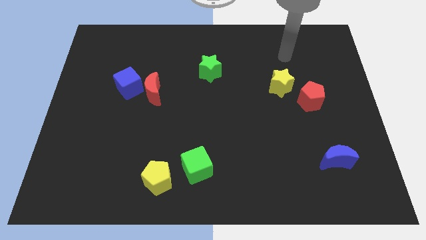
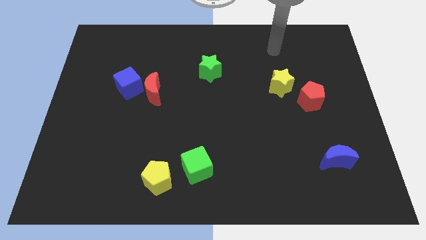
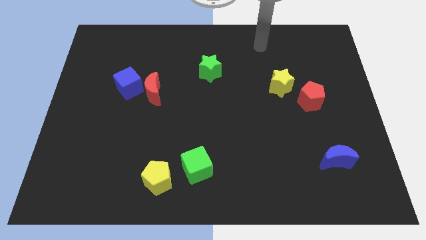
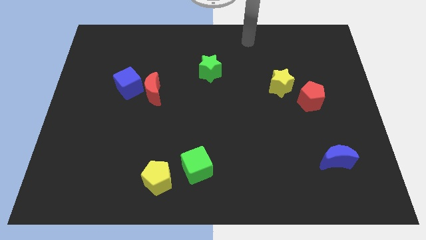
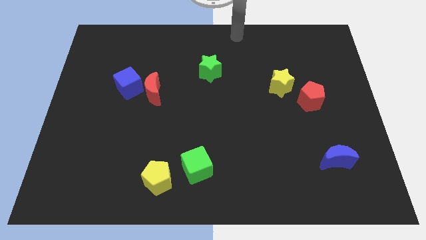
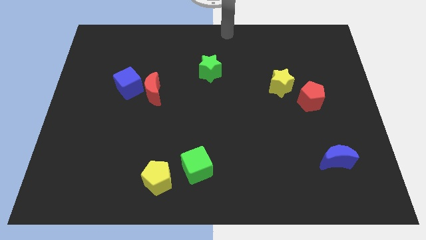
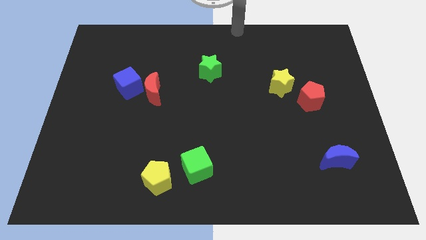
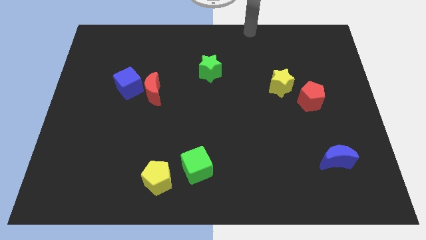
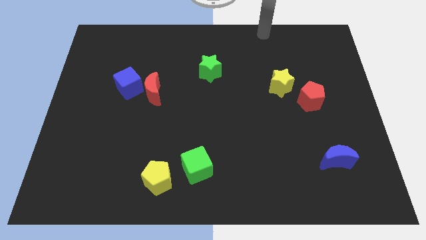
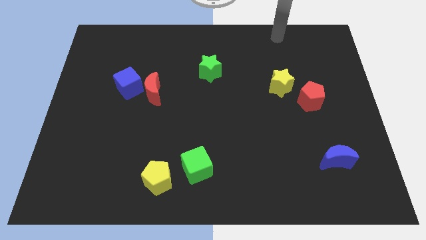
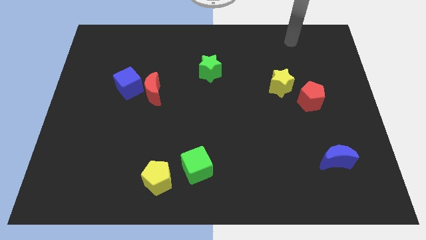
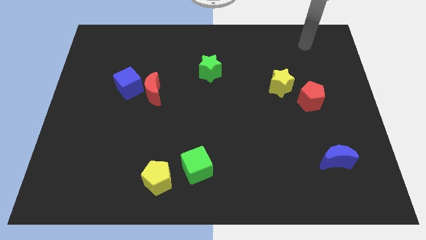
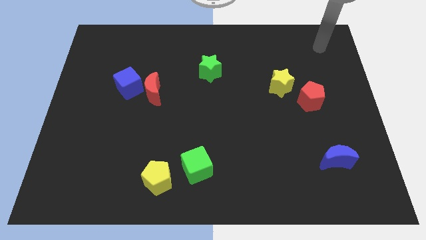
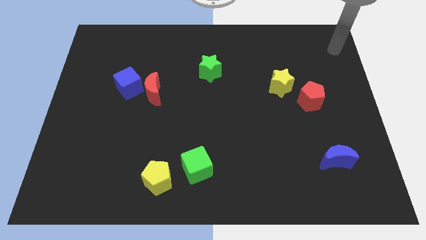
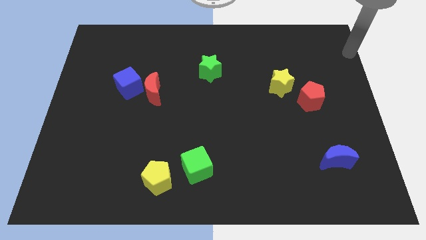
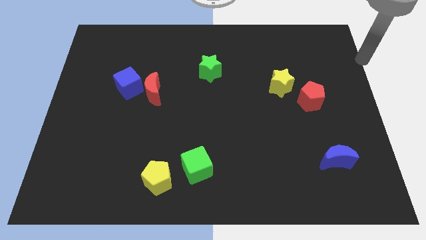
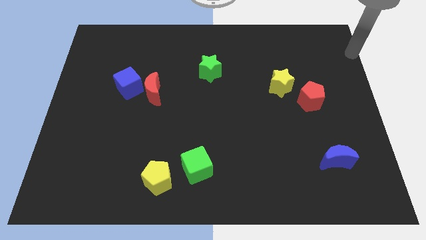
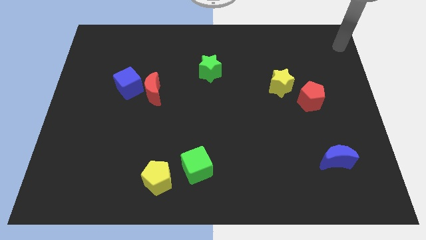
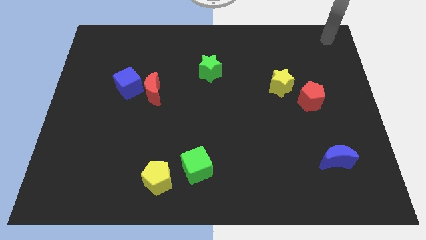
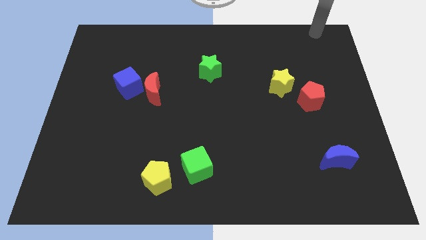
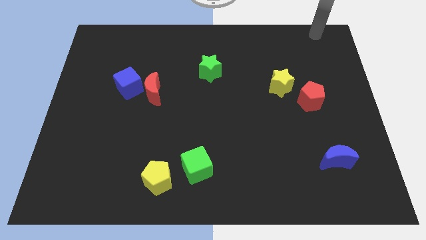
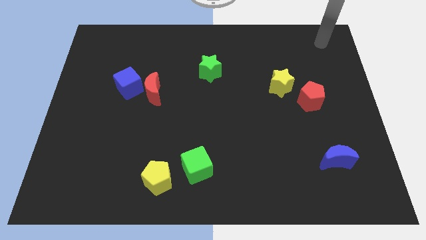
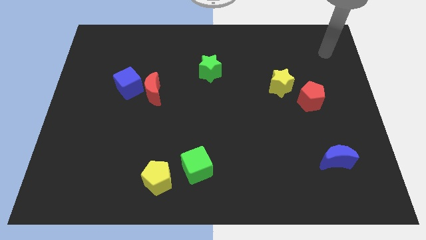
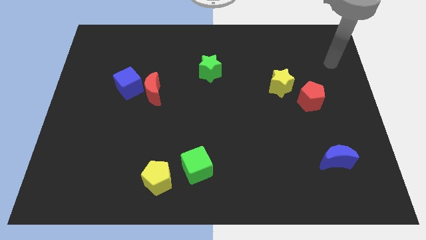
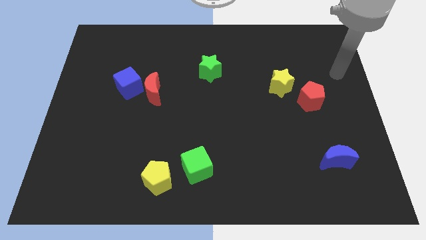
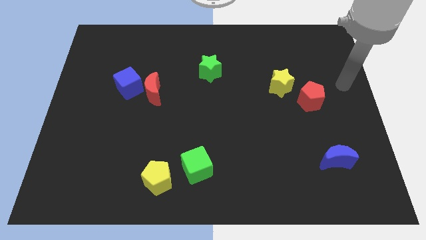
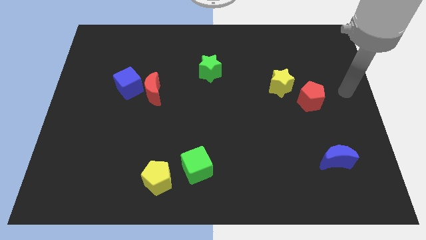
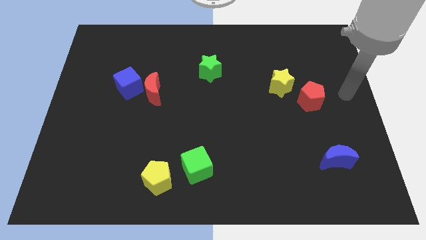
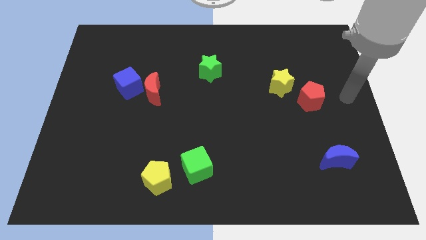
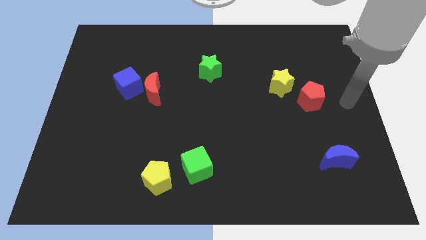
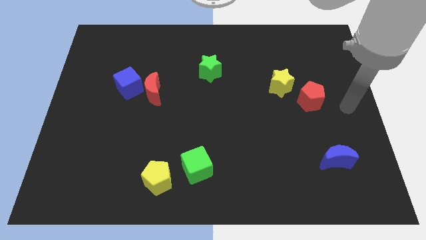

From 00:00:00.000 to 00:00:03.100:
go to the right side of the red pentagon

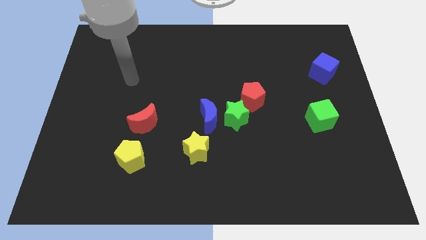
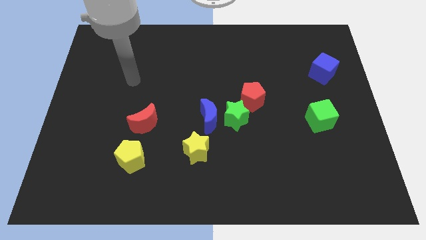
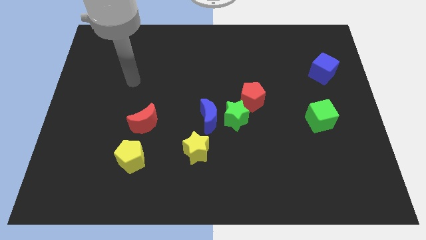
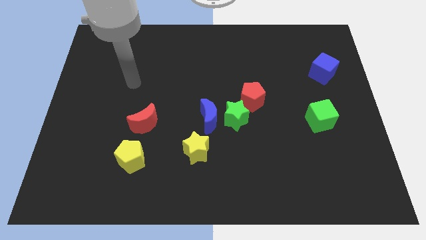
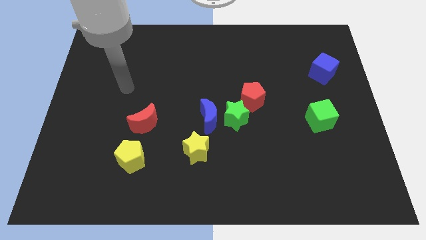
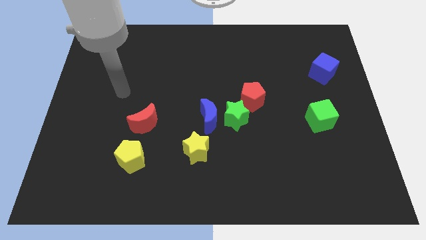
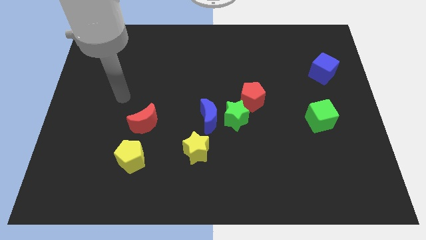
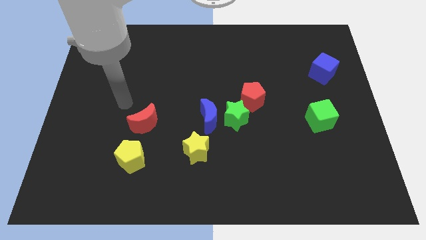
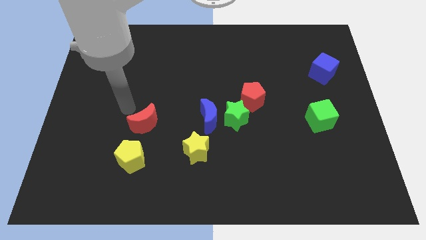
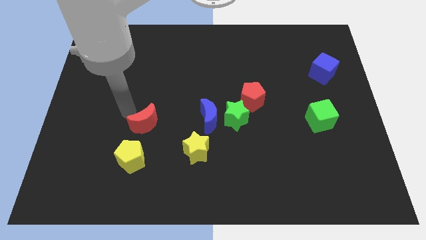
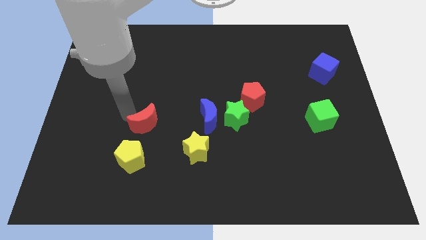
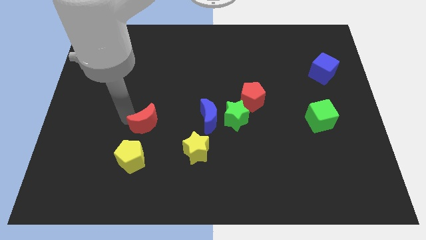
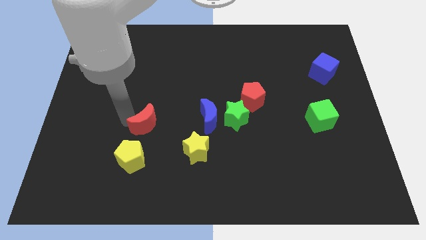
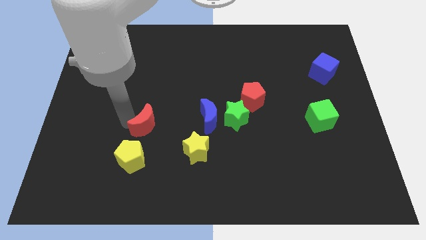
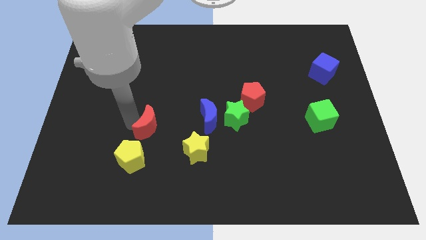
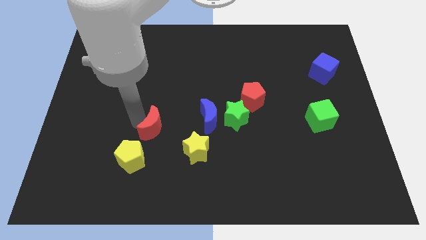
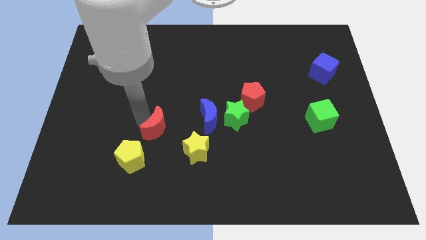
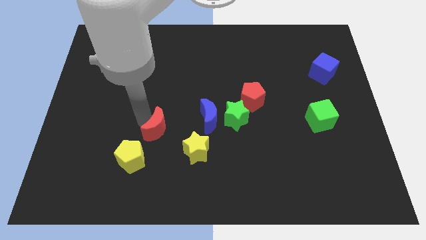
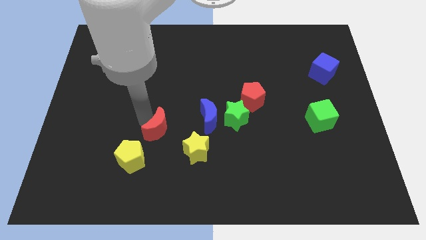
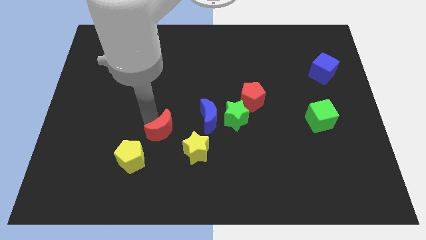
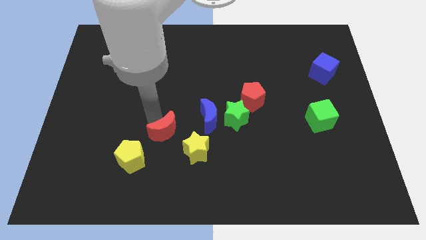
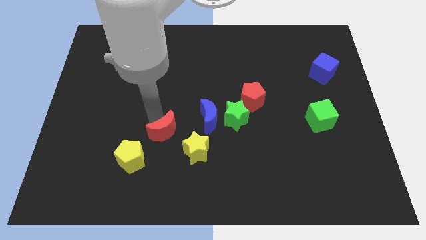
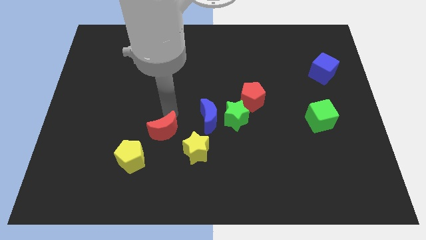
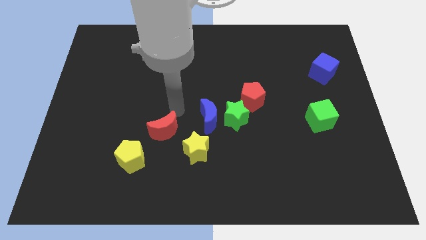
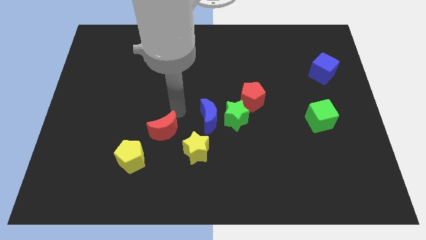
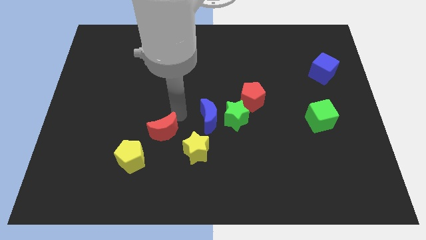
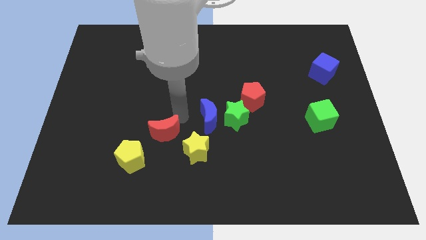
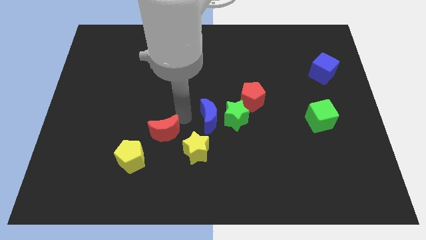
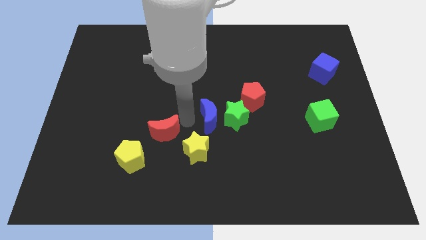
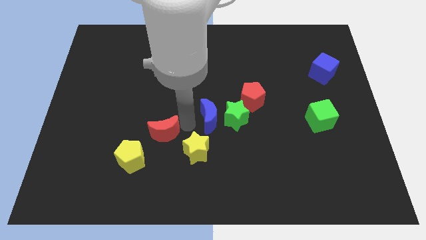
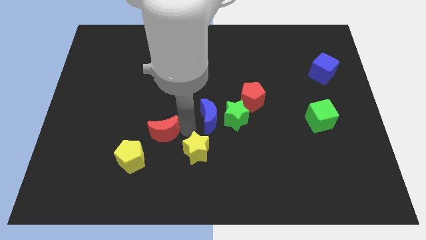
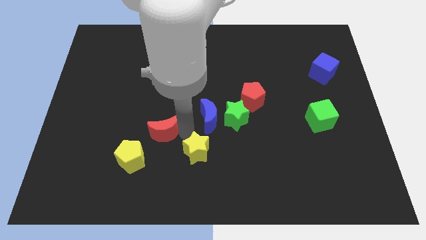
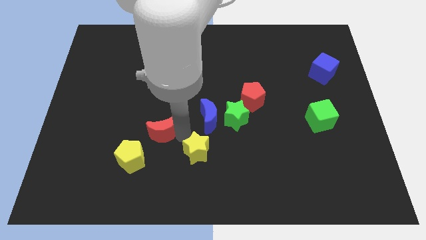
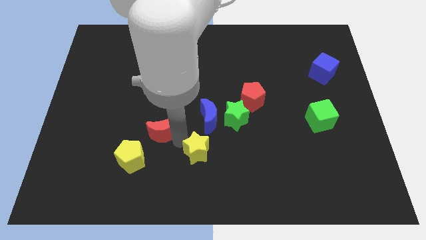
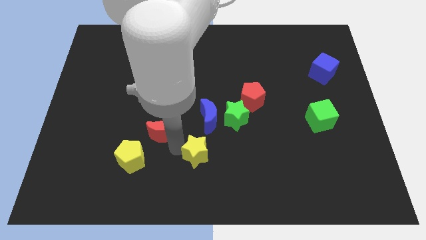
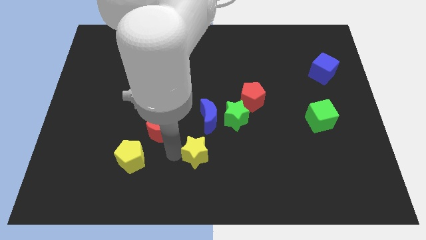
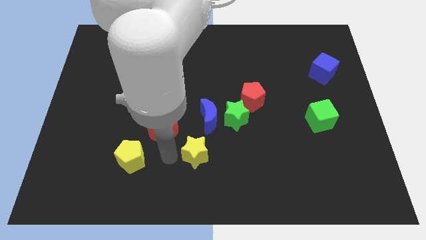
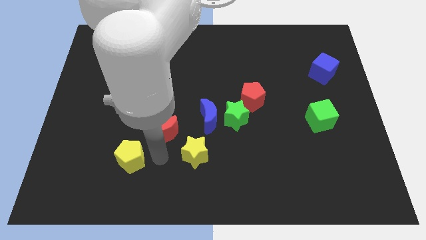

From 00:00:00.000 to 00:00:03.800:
move the red crescent towards yellow star

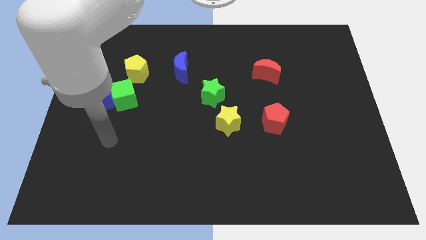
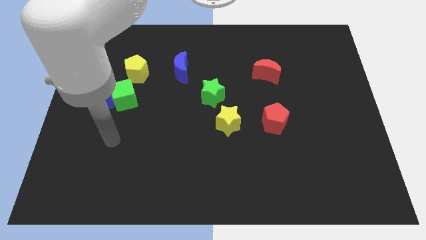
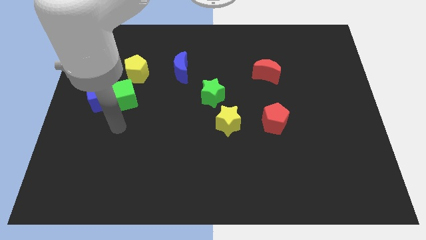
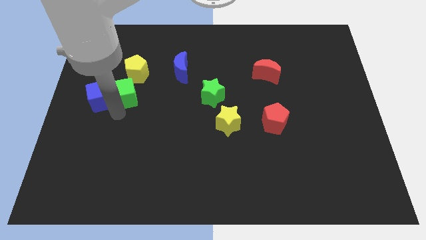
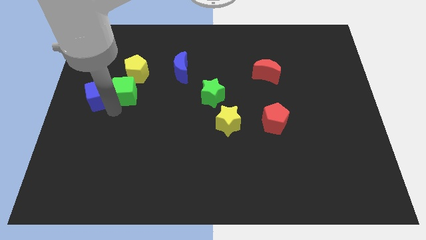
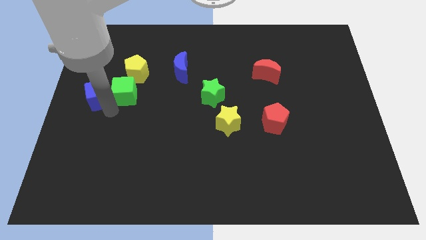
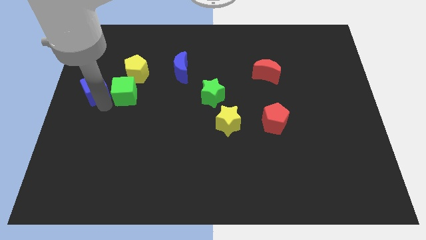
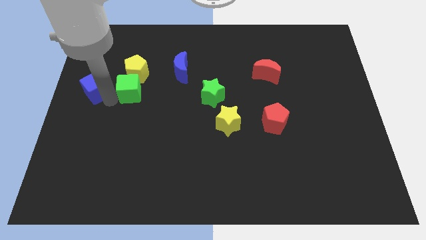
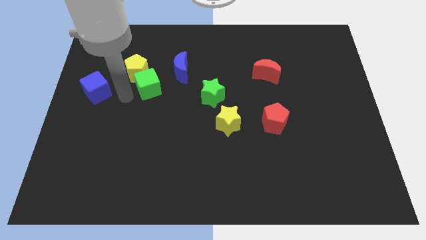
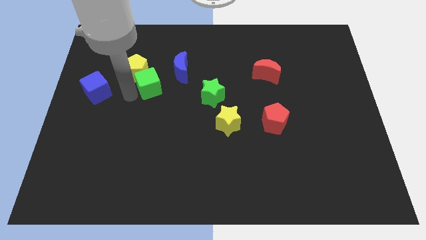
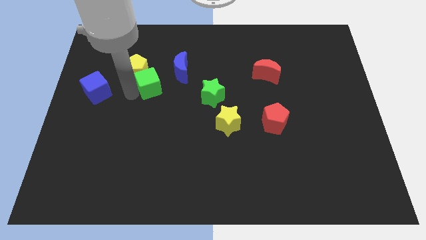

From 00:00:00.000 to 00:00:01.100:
separate the green cube from the blue cube

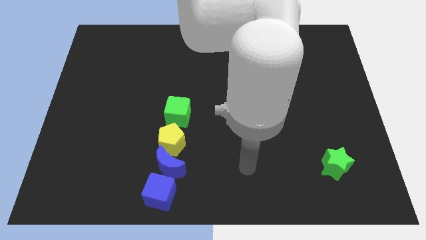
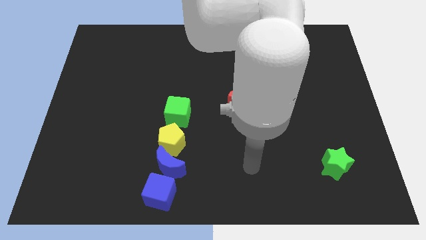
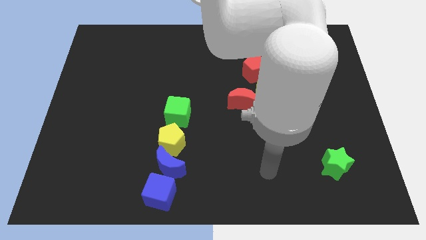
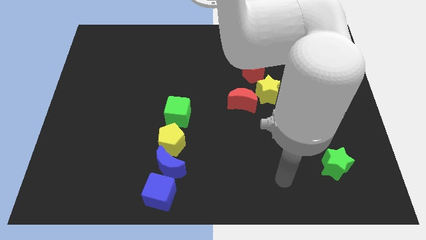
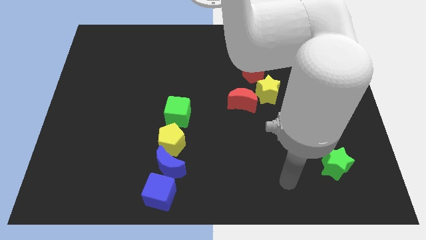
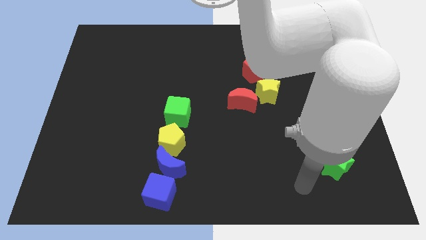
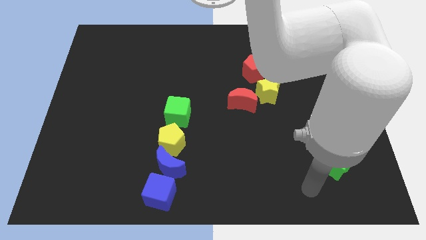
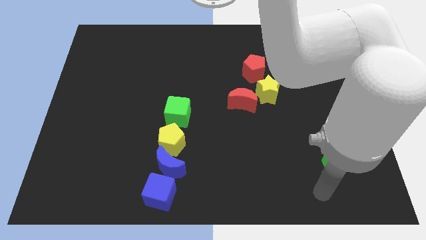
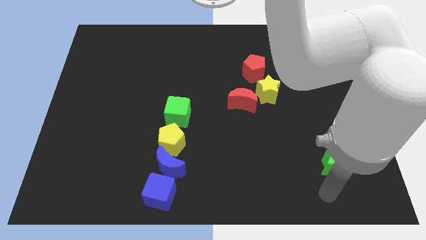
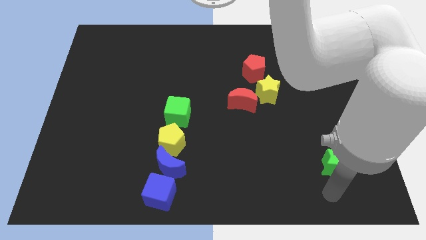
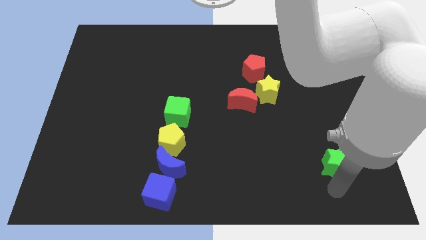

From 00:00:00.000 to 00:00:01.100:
move your arm to the bottom side of the green star
